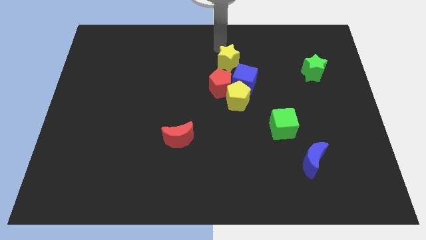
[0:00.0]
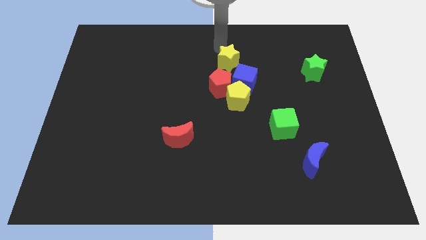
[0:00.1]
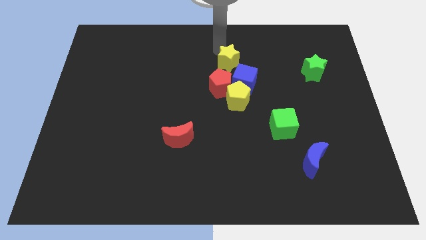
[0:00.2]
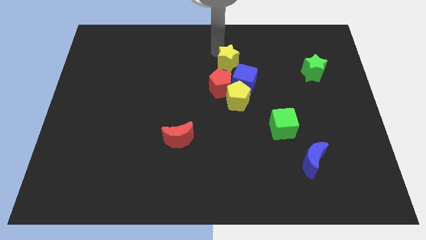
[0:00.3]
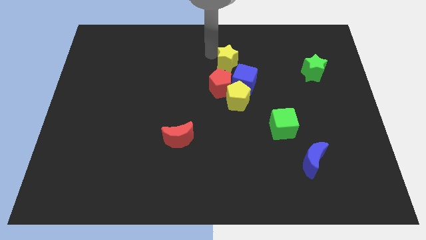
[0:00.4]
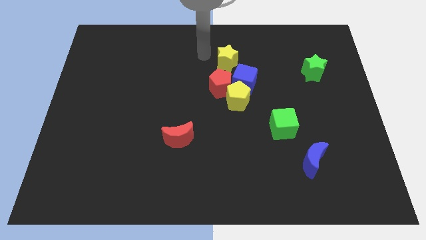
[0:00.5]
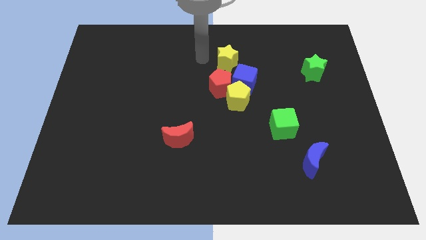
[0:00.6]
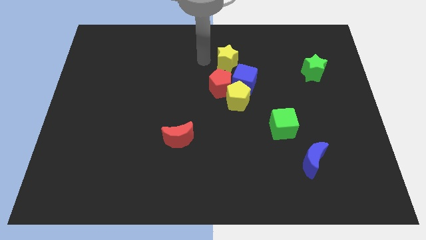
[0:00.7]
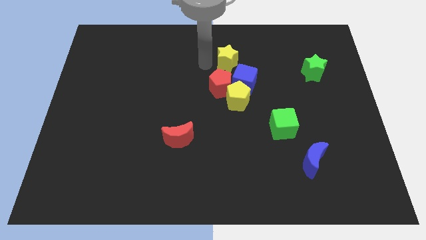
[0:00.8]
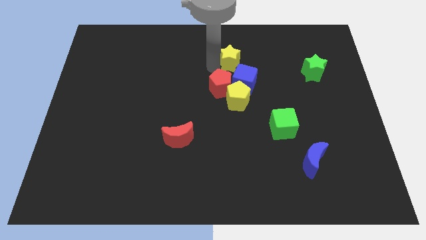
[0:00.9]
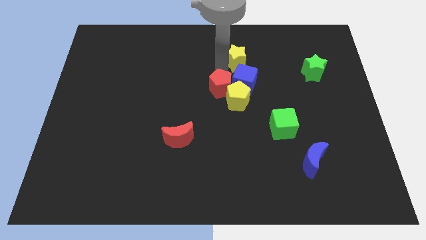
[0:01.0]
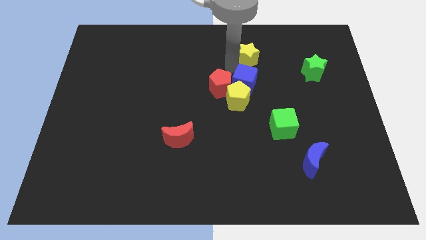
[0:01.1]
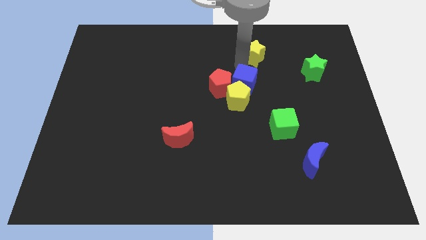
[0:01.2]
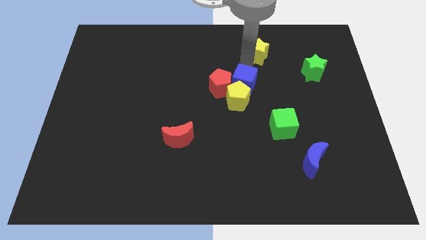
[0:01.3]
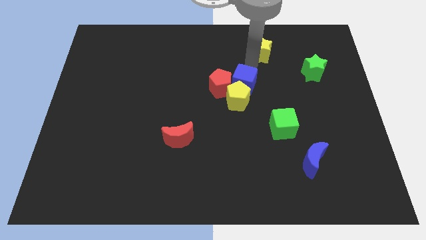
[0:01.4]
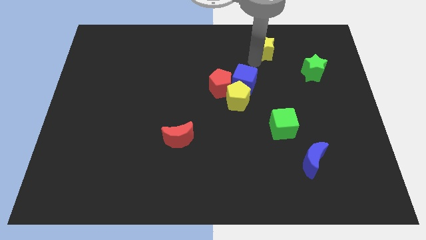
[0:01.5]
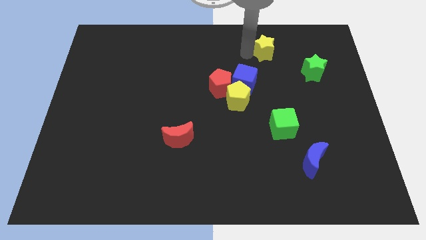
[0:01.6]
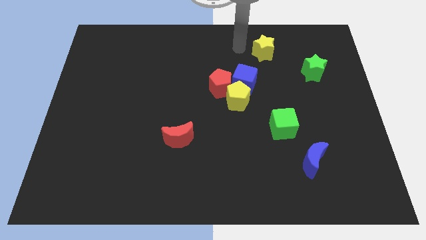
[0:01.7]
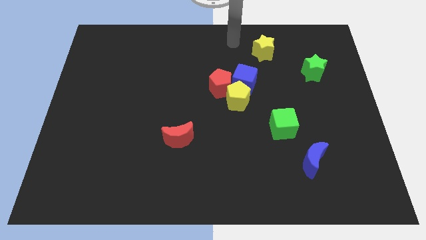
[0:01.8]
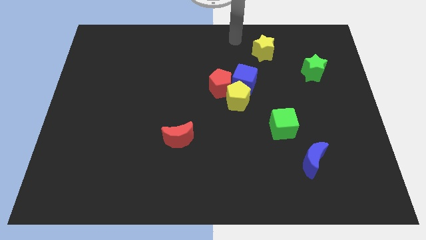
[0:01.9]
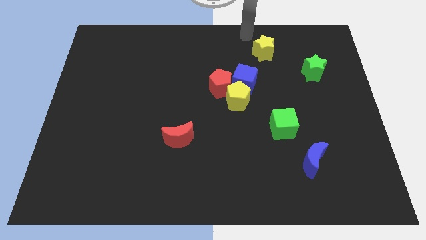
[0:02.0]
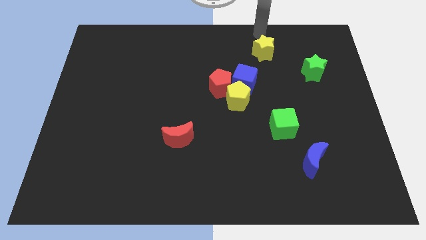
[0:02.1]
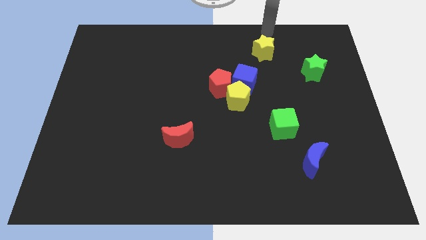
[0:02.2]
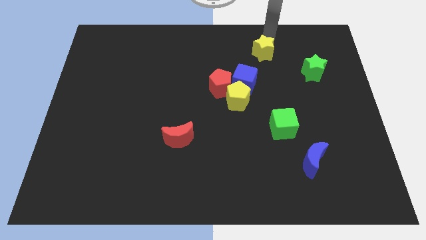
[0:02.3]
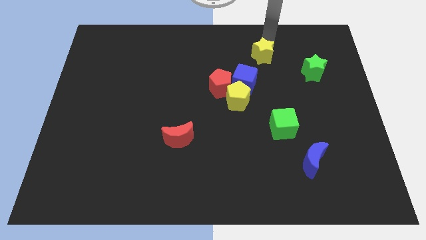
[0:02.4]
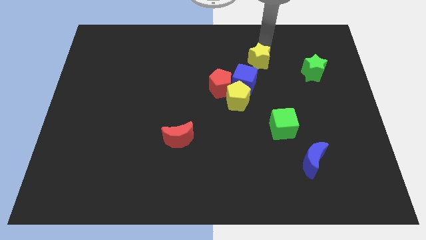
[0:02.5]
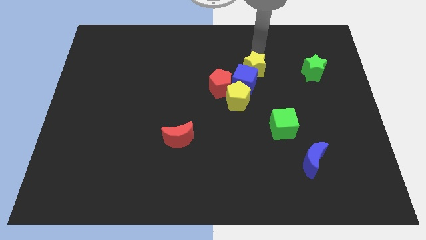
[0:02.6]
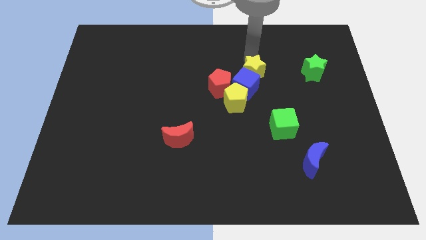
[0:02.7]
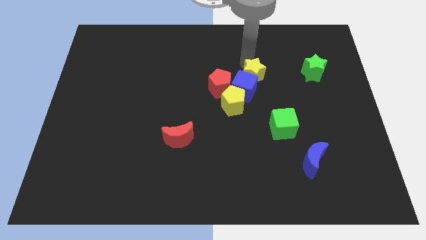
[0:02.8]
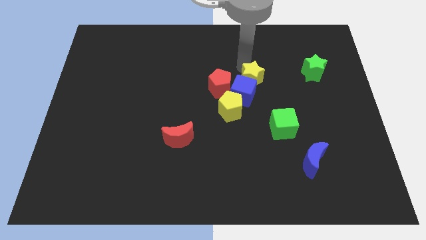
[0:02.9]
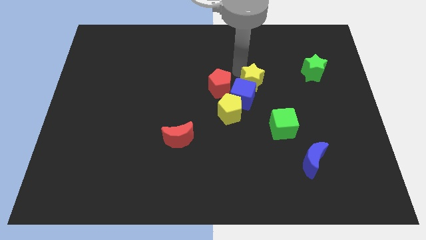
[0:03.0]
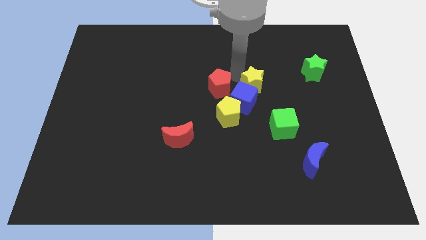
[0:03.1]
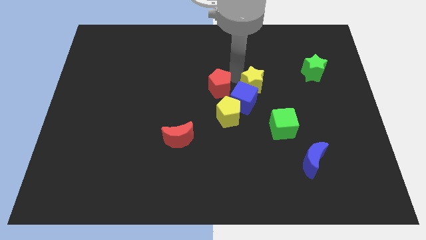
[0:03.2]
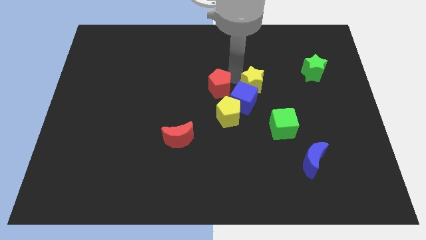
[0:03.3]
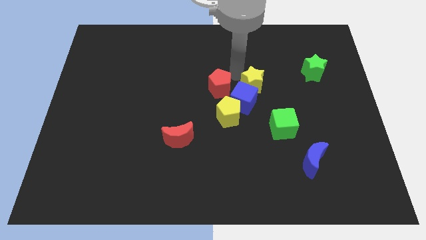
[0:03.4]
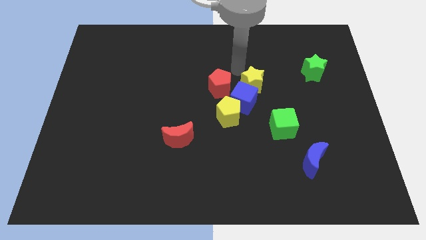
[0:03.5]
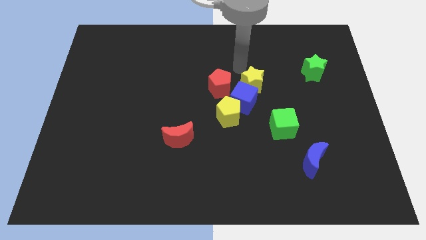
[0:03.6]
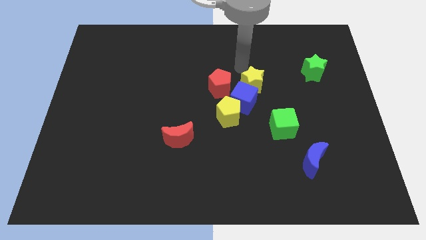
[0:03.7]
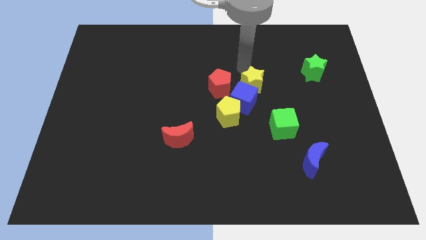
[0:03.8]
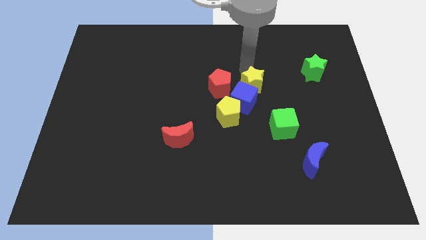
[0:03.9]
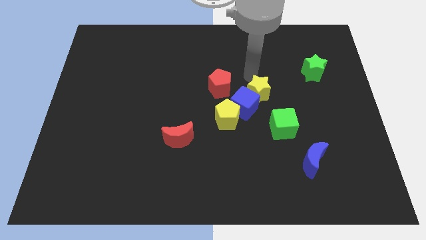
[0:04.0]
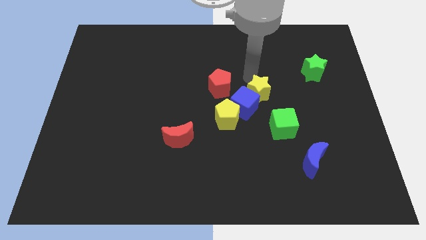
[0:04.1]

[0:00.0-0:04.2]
push the yellow star into the group of blocks

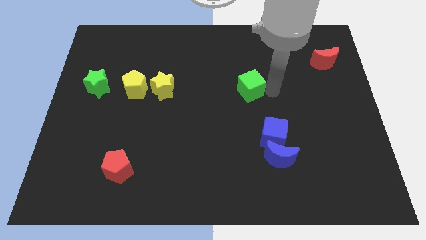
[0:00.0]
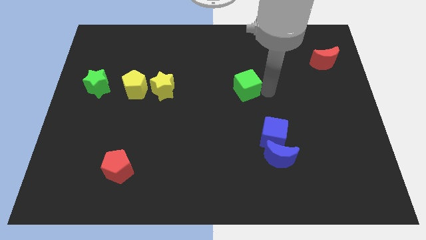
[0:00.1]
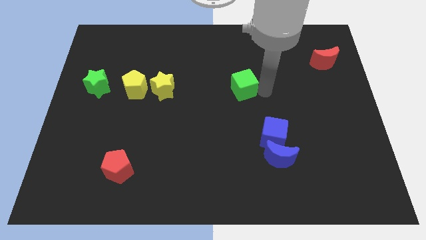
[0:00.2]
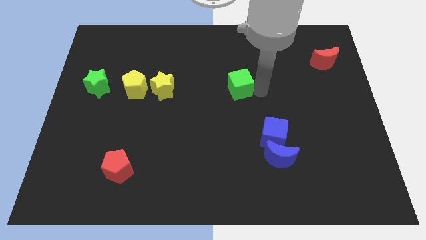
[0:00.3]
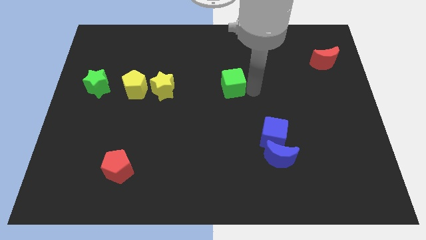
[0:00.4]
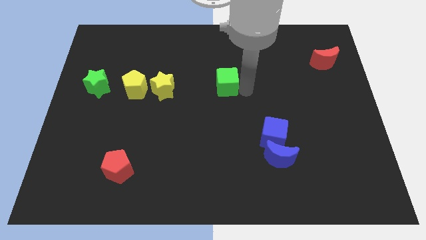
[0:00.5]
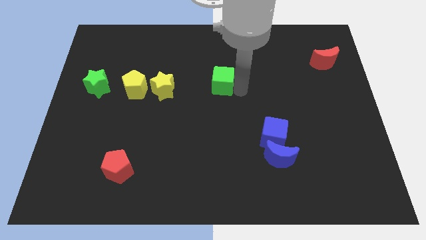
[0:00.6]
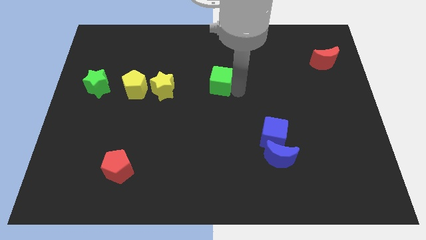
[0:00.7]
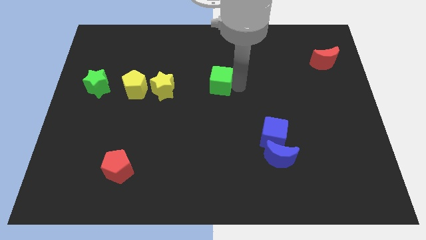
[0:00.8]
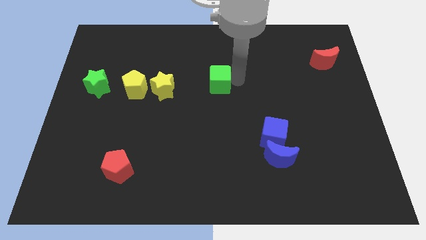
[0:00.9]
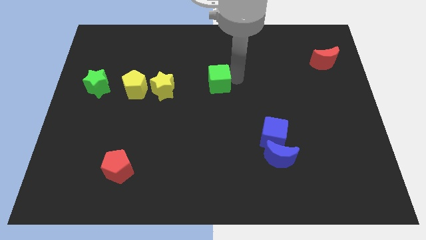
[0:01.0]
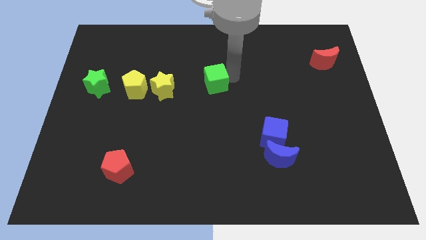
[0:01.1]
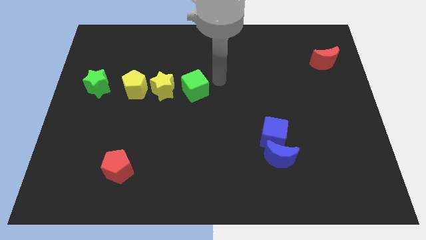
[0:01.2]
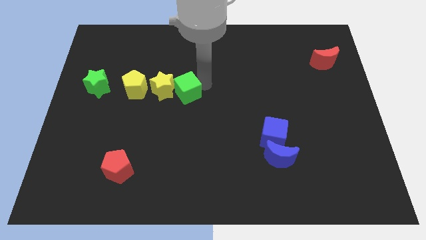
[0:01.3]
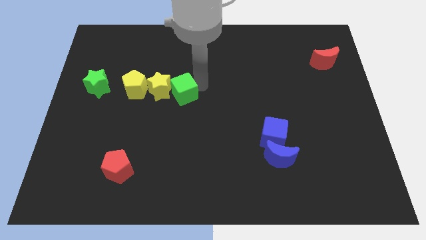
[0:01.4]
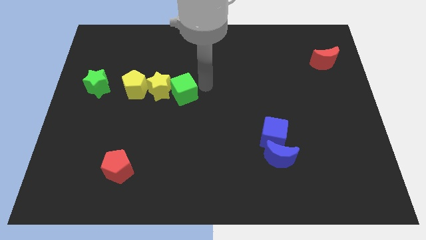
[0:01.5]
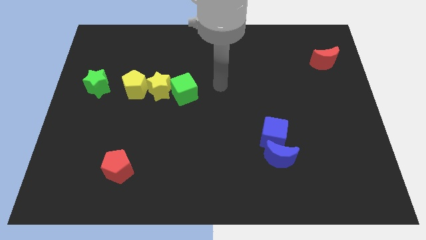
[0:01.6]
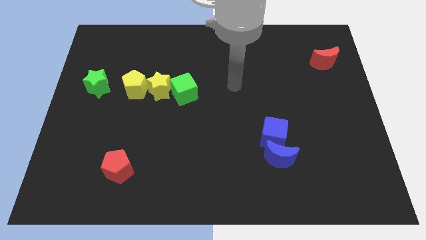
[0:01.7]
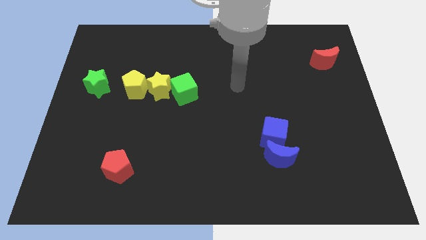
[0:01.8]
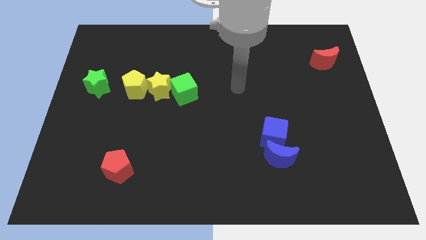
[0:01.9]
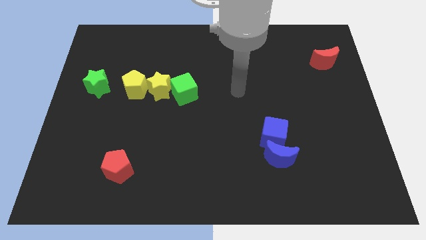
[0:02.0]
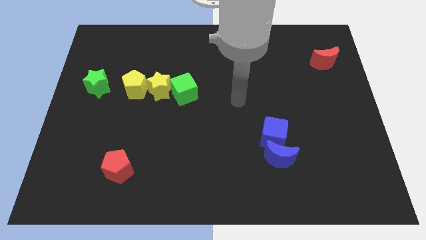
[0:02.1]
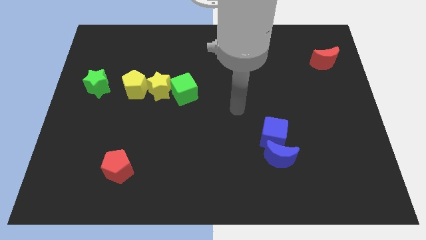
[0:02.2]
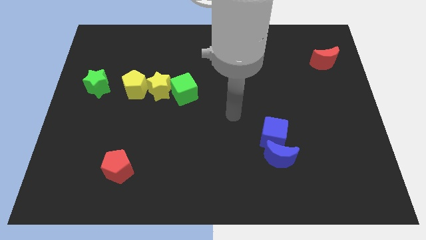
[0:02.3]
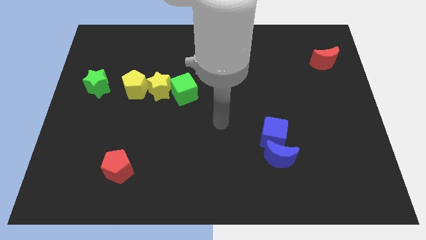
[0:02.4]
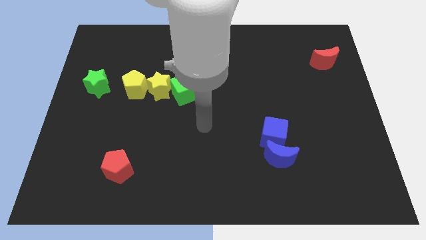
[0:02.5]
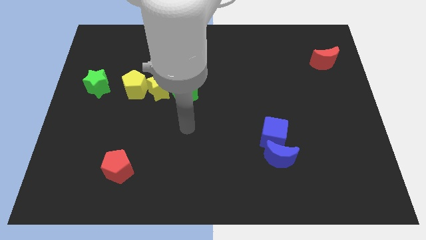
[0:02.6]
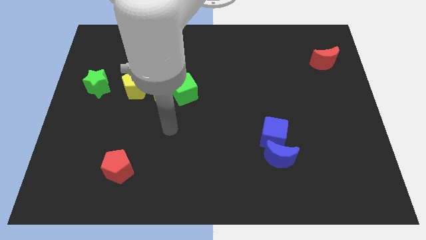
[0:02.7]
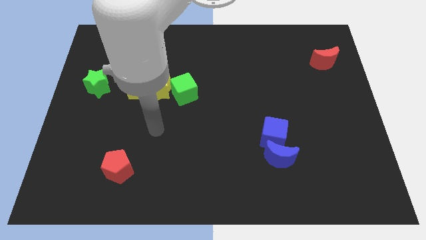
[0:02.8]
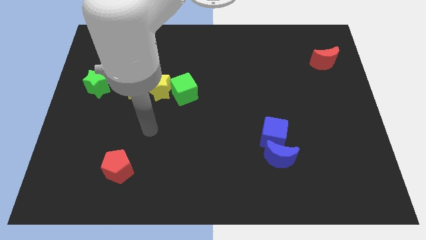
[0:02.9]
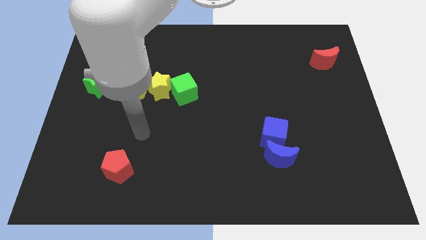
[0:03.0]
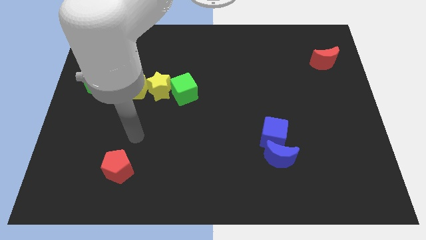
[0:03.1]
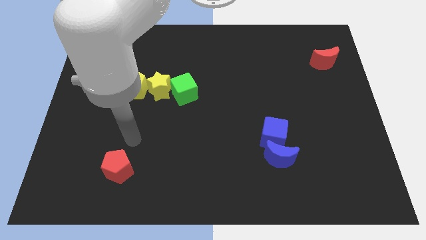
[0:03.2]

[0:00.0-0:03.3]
push the green cube into the yellow star

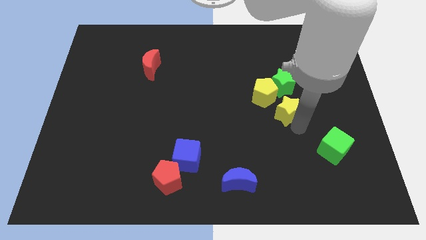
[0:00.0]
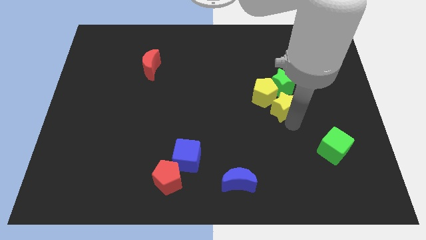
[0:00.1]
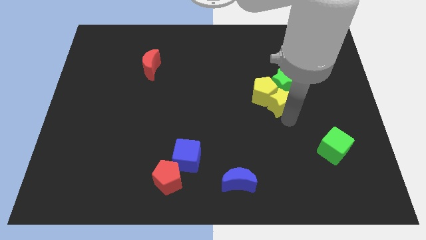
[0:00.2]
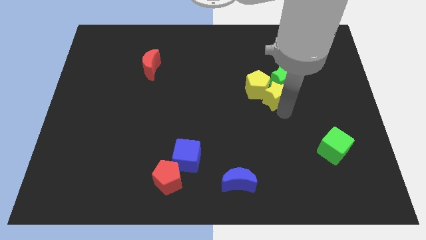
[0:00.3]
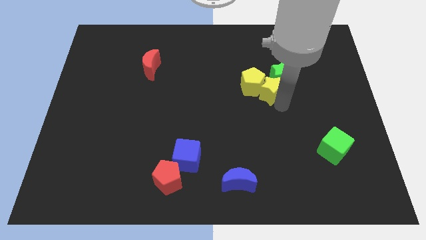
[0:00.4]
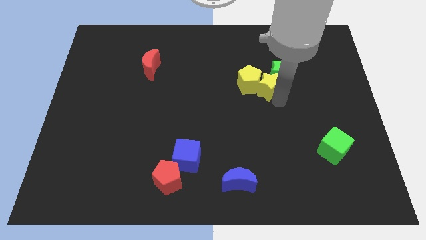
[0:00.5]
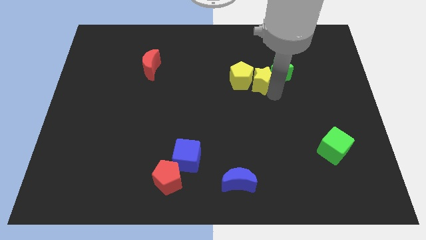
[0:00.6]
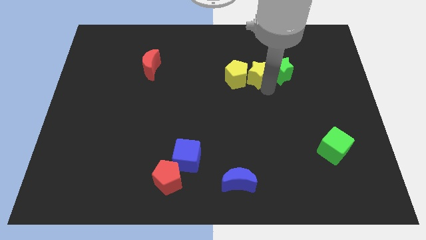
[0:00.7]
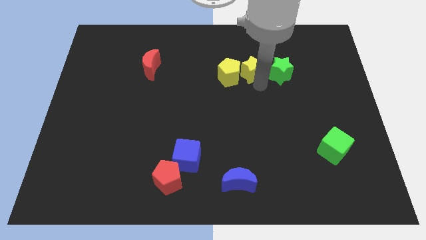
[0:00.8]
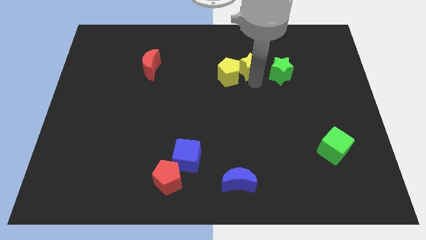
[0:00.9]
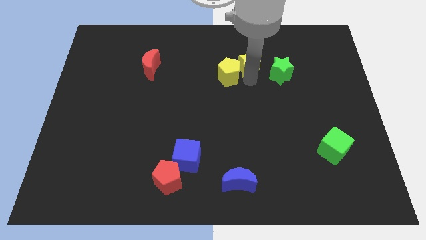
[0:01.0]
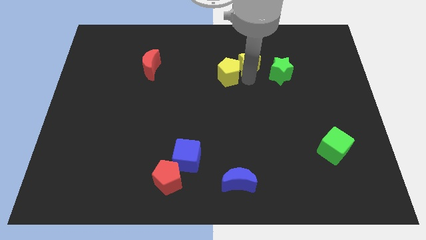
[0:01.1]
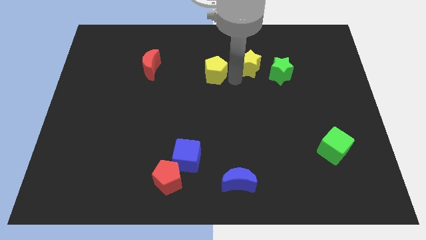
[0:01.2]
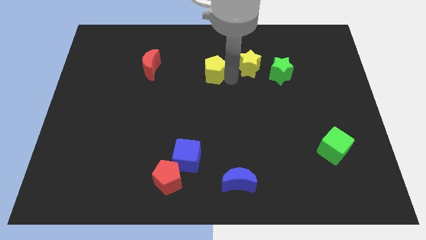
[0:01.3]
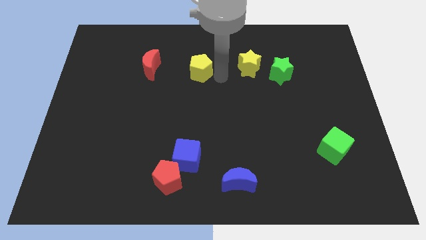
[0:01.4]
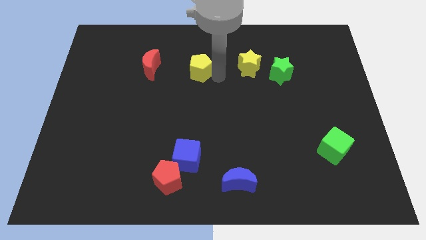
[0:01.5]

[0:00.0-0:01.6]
push the yellow pentagon and green star with yellow star
